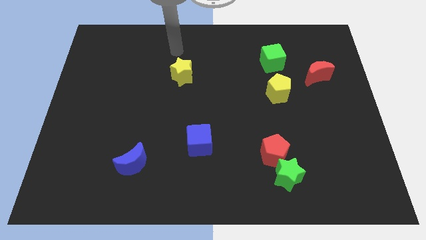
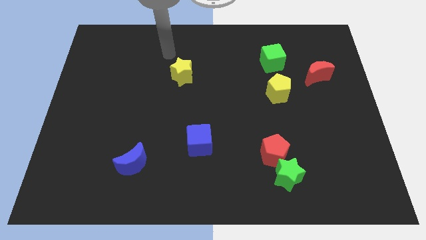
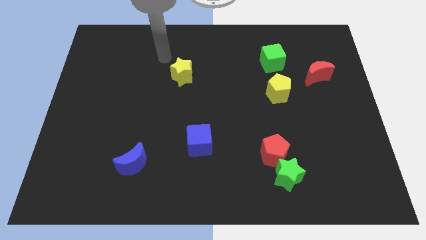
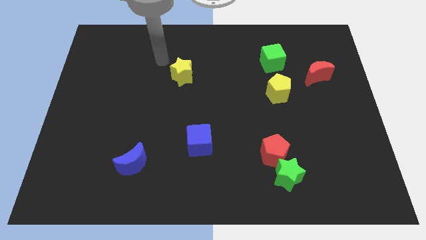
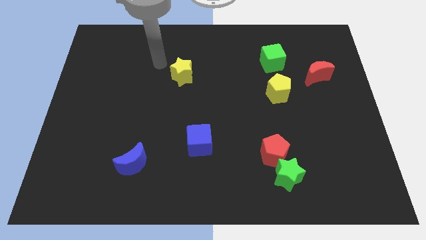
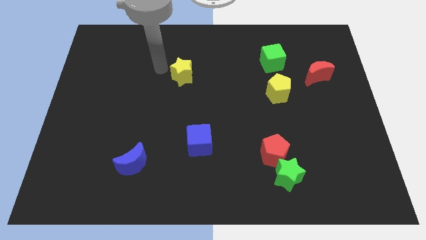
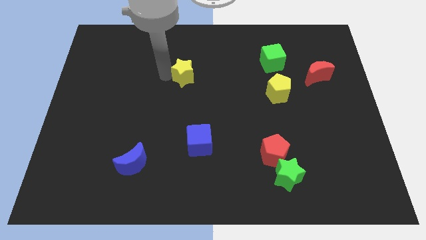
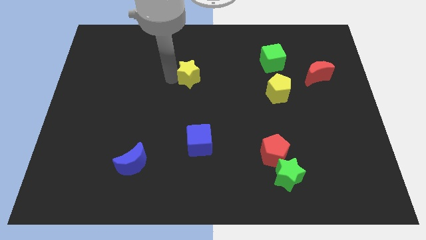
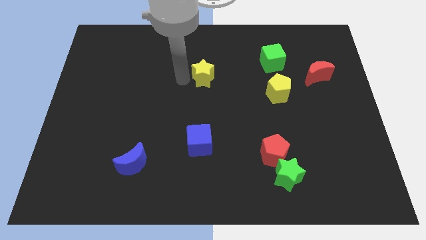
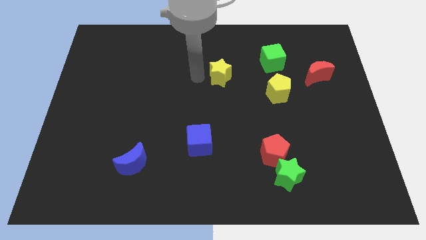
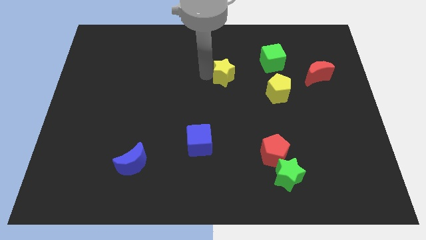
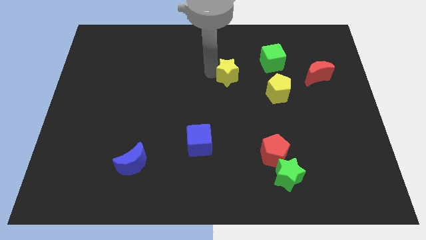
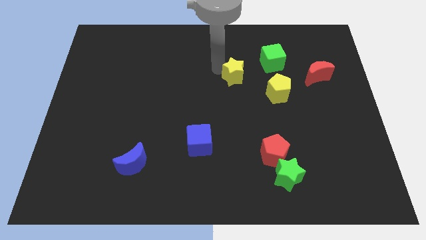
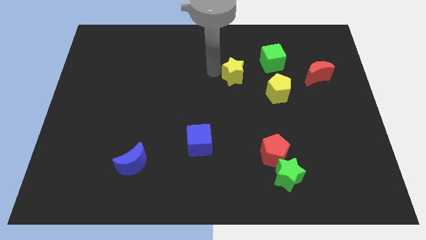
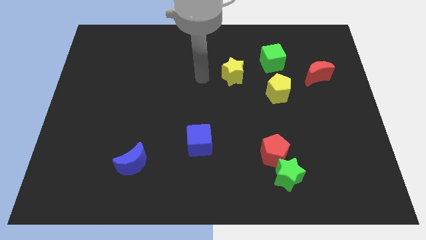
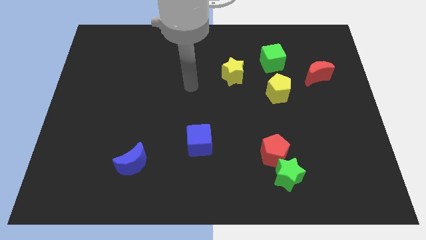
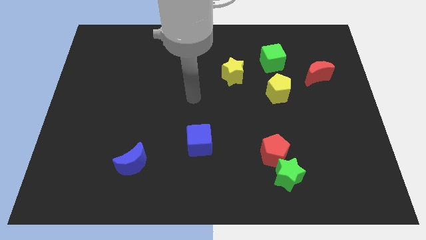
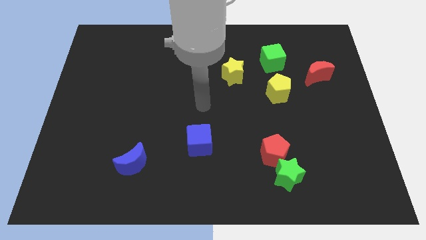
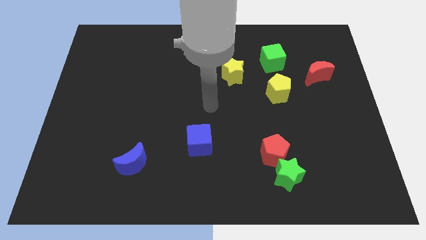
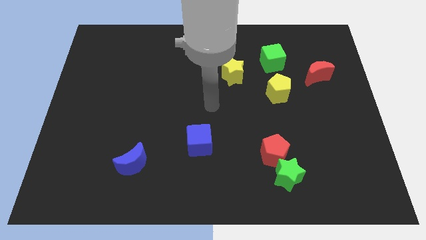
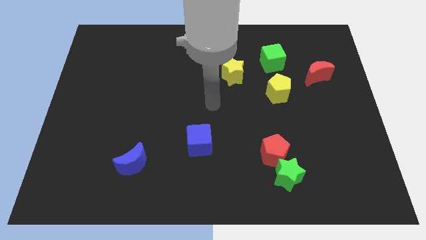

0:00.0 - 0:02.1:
push the green star slightly to the left

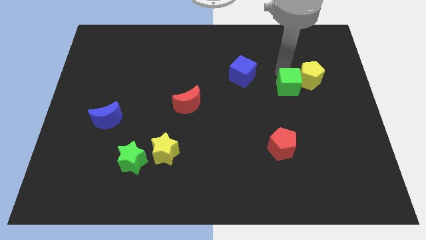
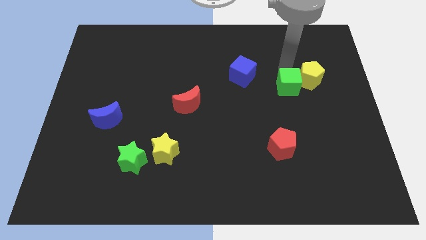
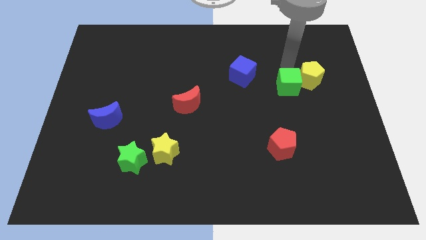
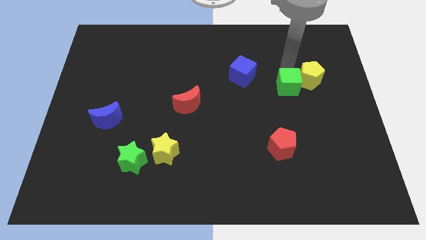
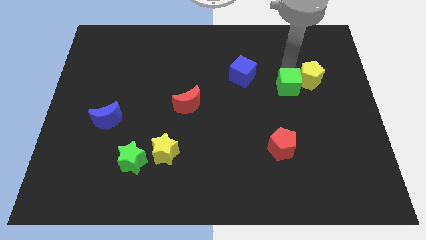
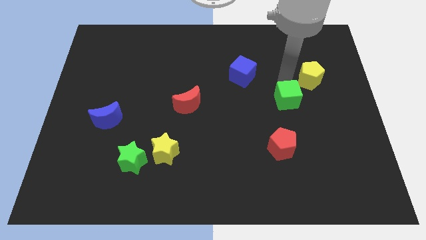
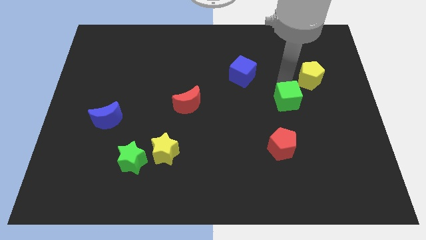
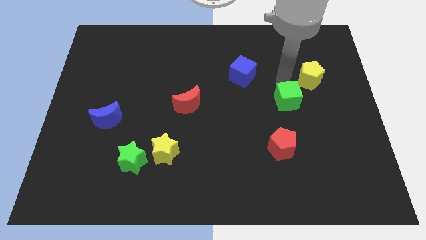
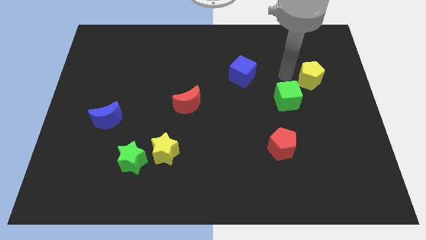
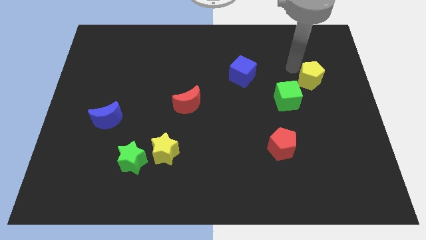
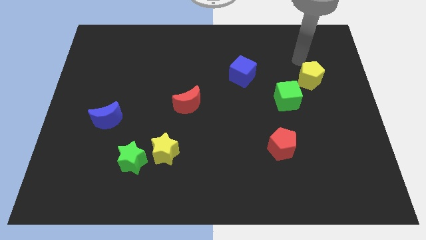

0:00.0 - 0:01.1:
separate green star from yellow pentagon

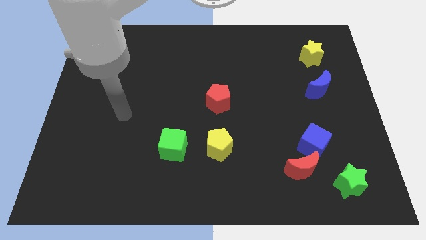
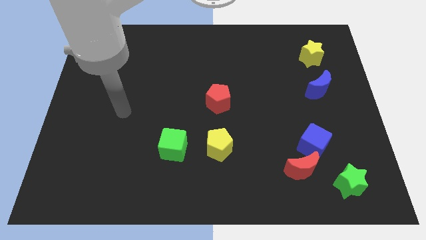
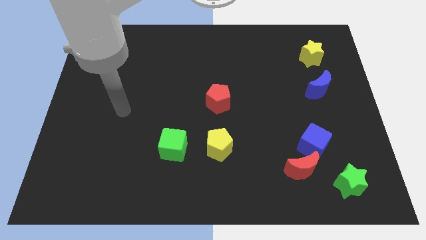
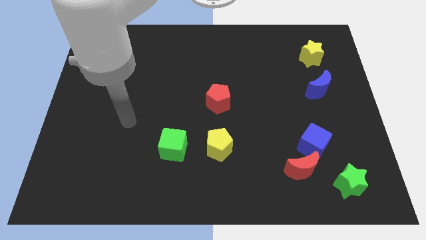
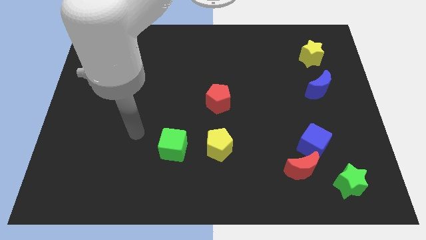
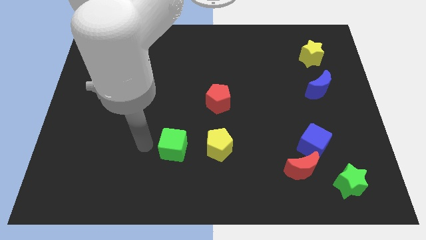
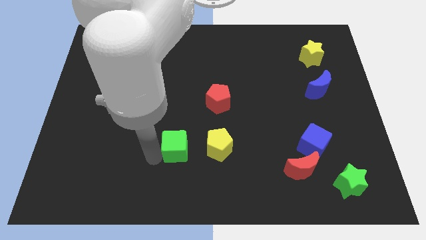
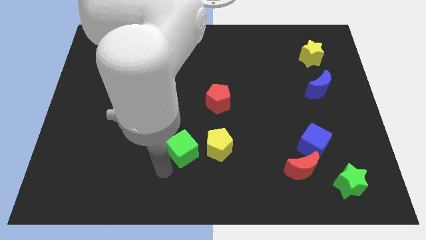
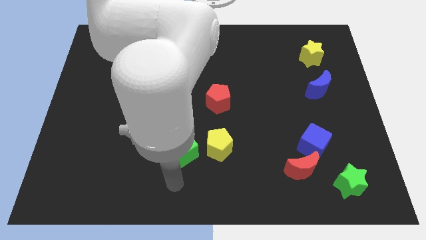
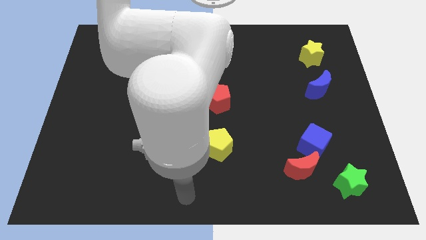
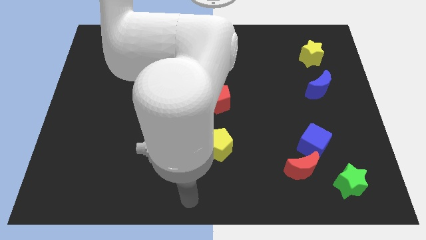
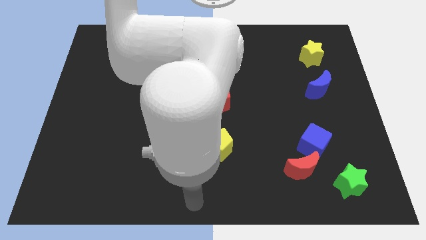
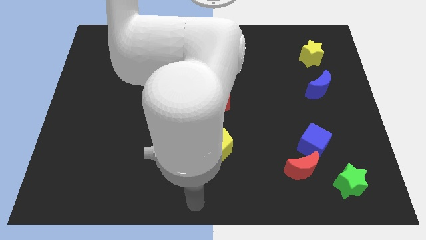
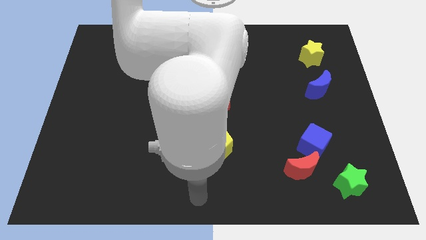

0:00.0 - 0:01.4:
move the green cube slightly downwards

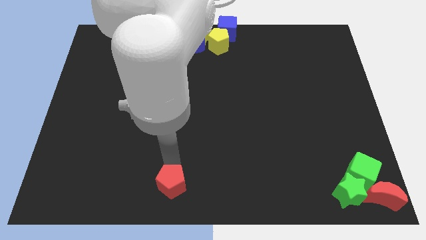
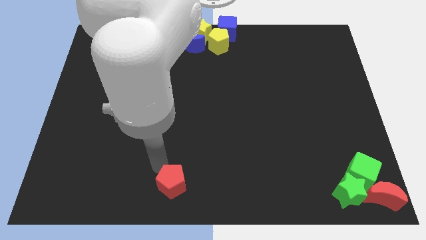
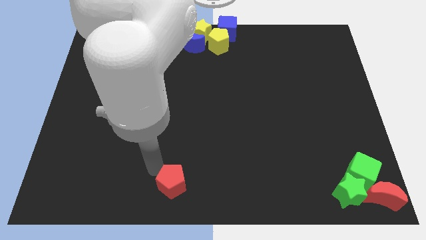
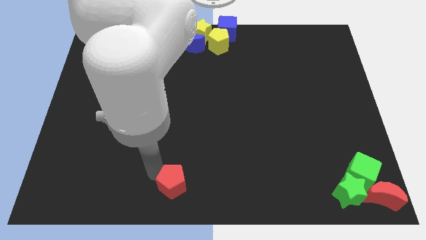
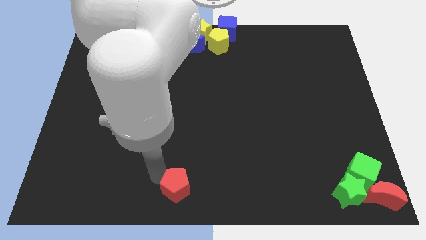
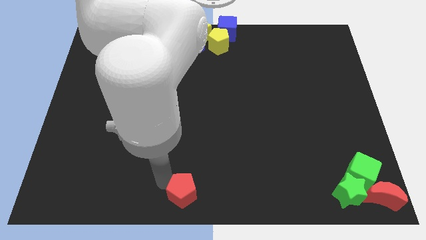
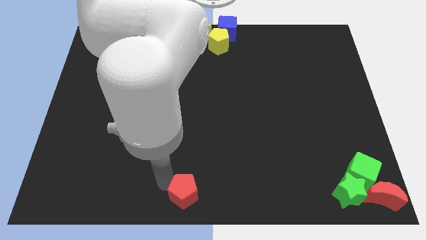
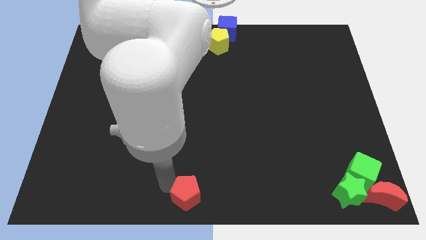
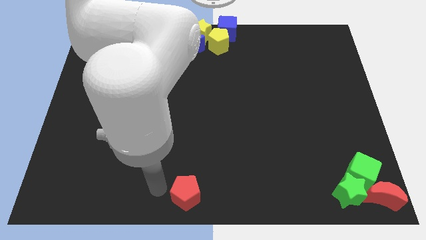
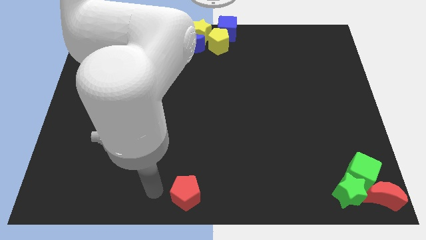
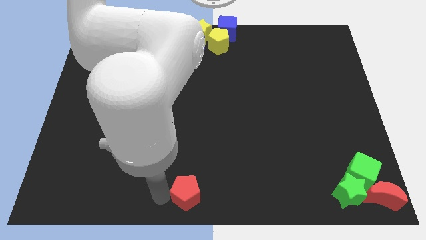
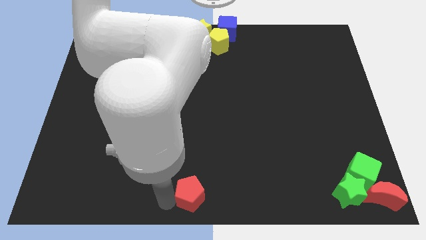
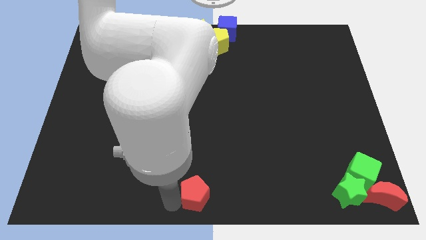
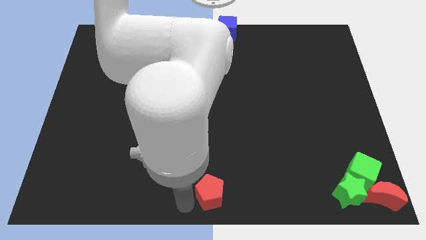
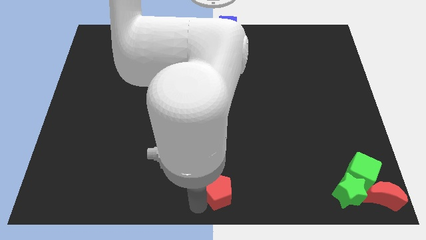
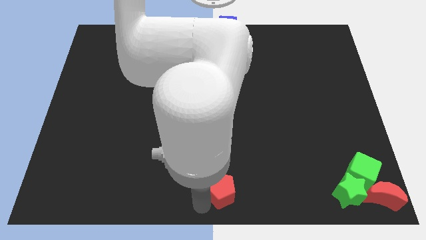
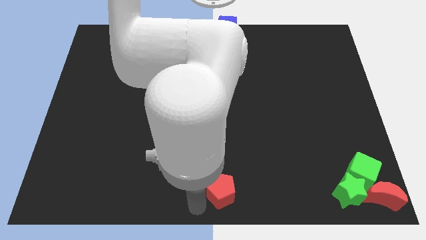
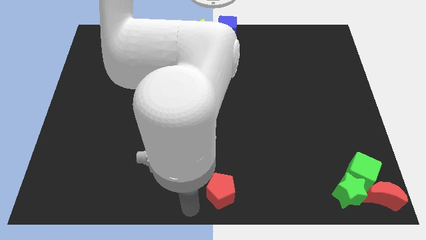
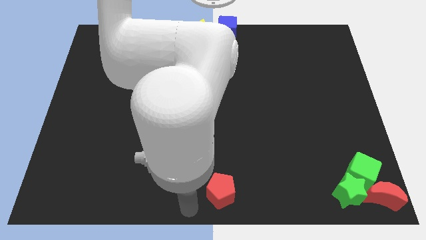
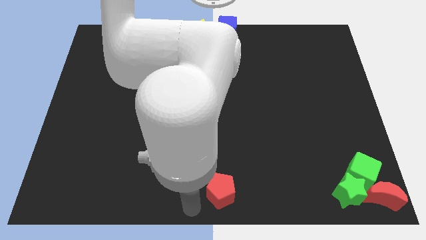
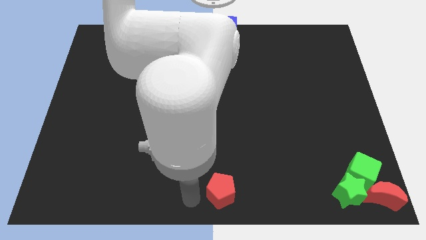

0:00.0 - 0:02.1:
place the red pentagon at the bottom center of the board

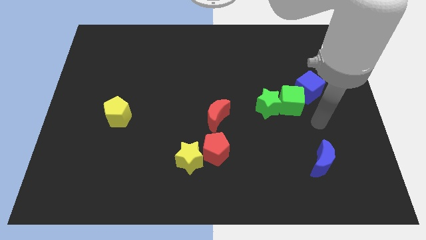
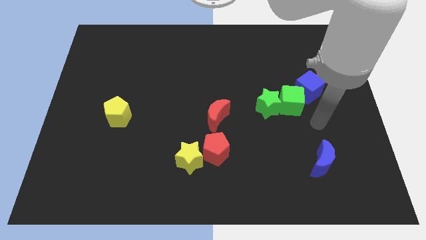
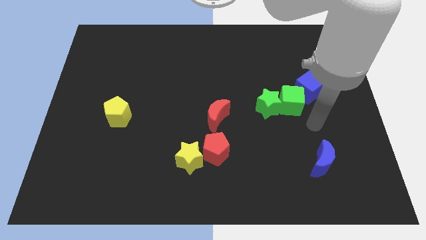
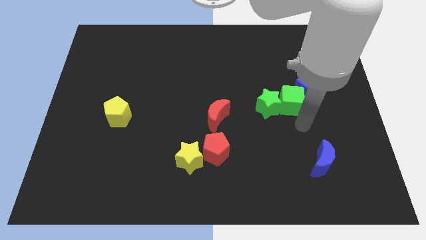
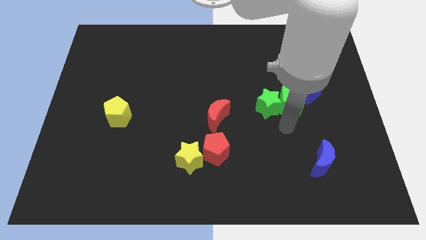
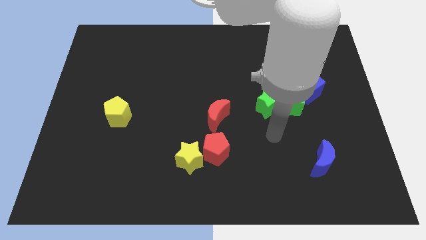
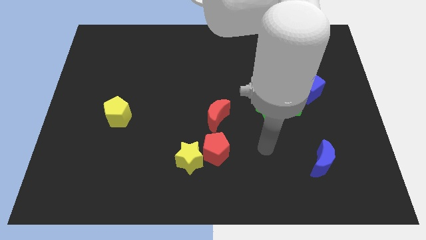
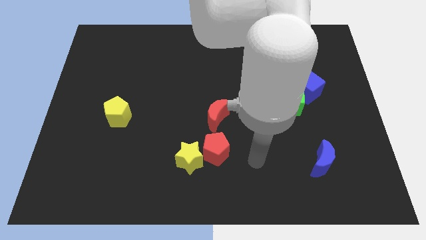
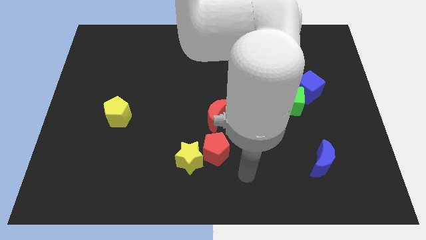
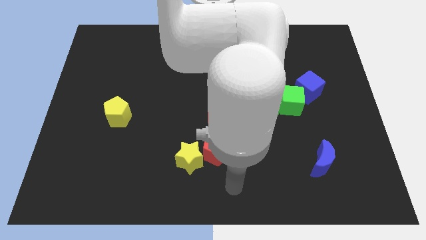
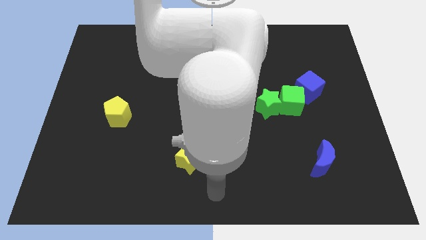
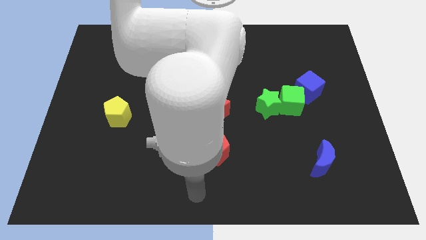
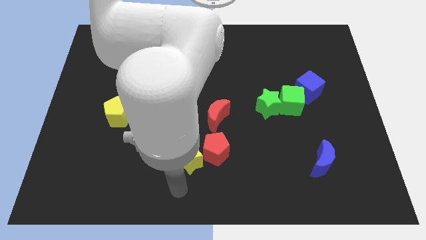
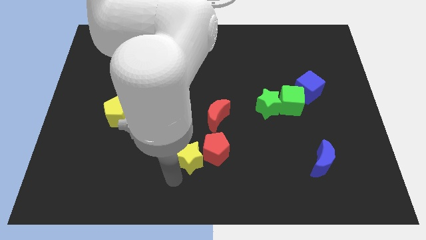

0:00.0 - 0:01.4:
move your arm to the bottom center of the board

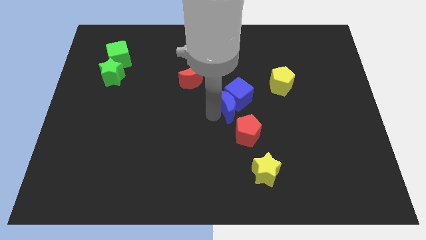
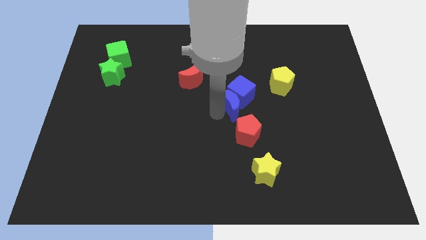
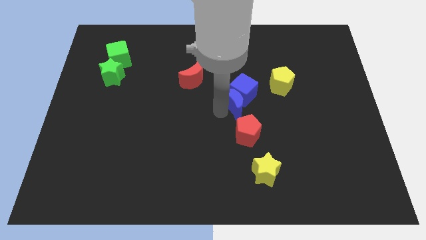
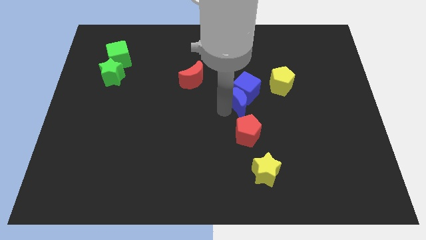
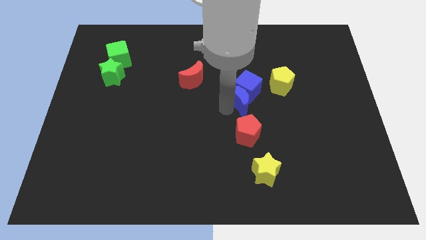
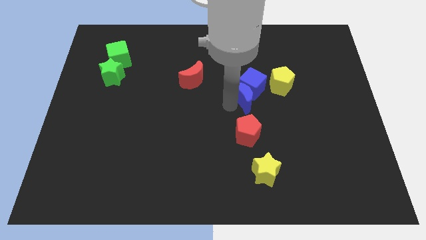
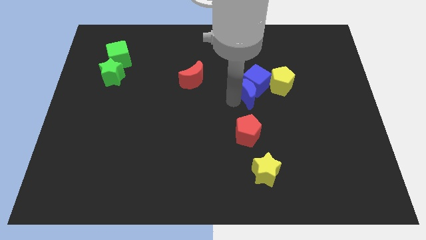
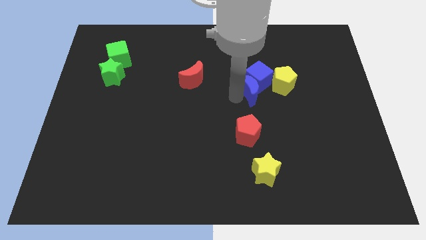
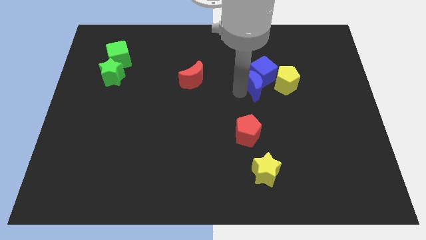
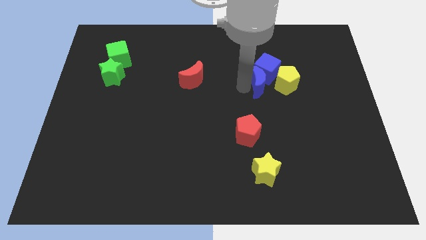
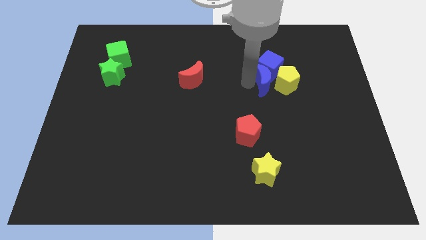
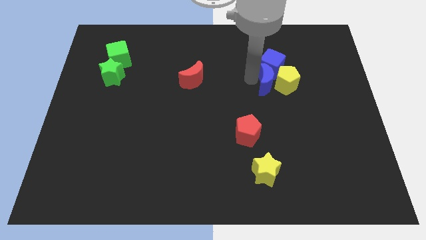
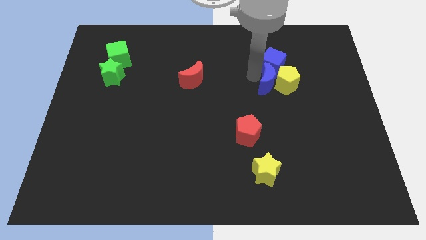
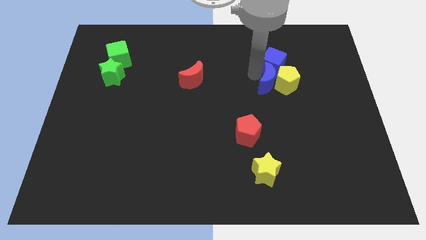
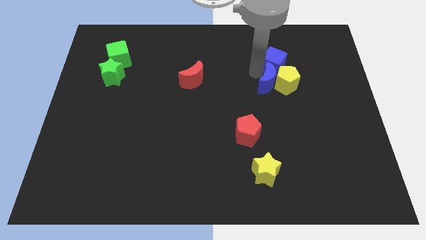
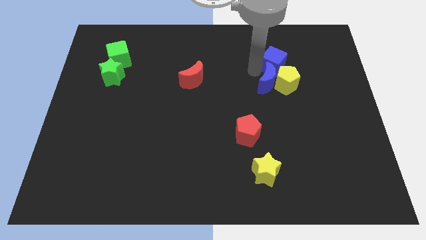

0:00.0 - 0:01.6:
slide both the blue cube and blue crescent into the yellow pentagon
